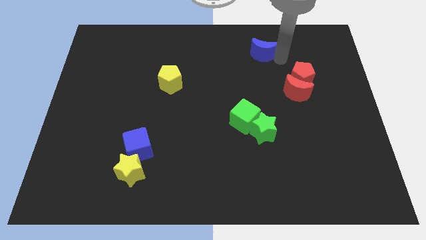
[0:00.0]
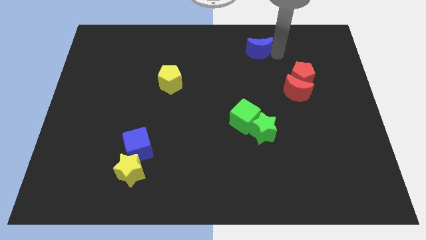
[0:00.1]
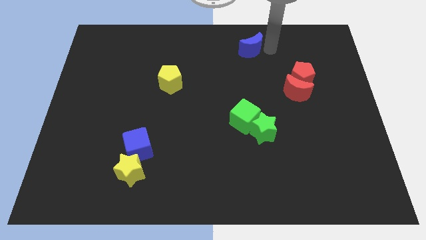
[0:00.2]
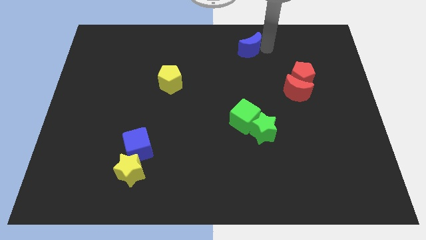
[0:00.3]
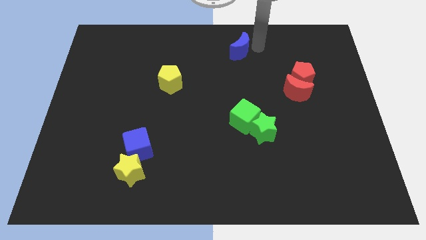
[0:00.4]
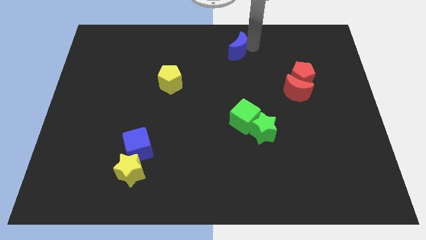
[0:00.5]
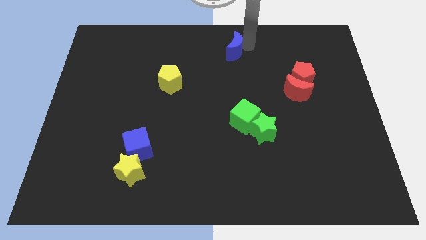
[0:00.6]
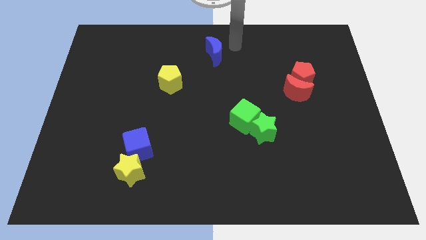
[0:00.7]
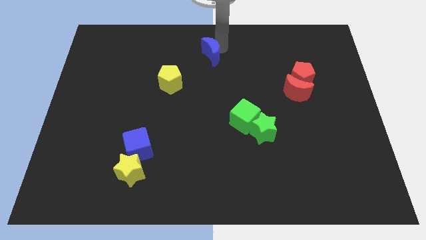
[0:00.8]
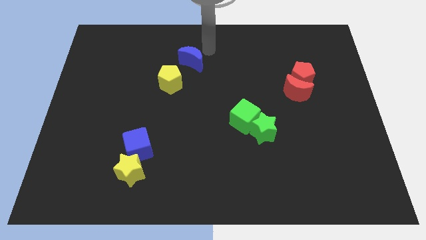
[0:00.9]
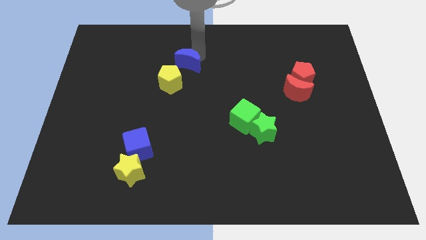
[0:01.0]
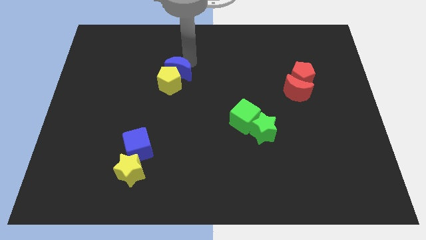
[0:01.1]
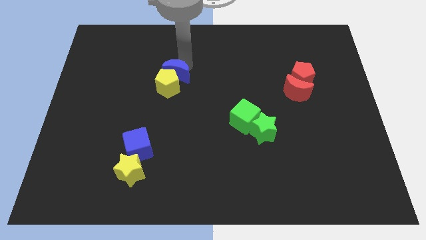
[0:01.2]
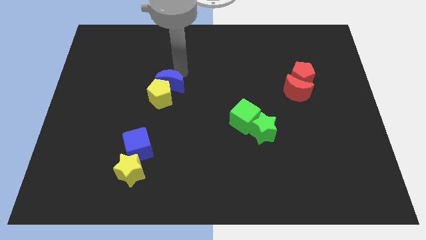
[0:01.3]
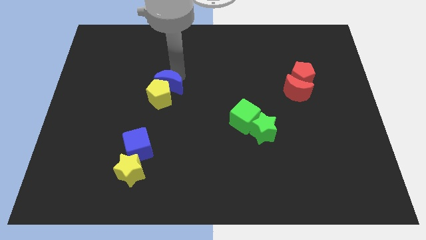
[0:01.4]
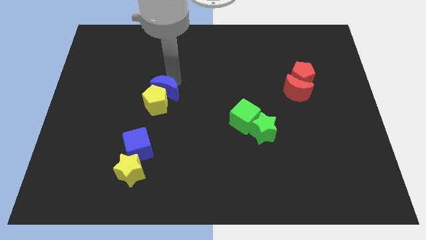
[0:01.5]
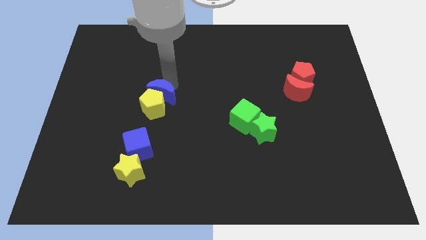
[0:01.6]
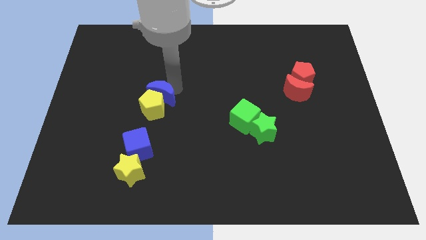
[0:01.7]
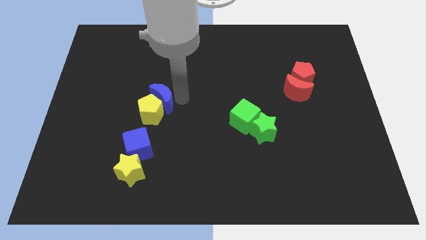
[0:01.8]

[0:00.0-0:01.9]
drag the blue crescent towards the yellow pentagon

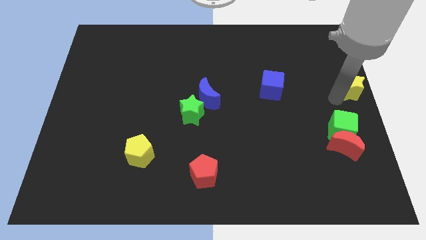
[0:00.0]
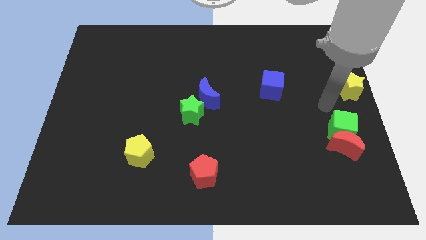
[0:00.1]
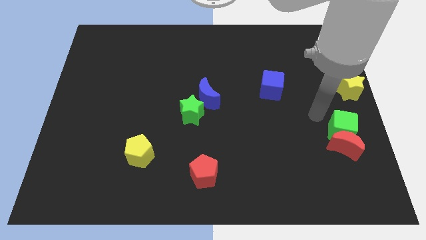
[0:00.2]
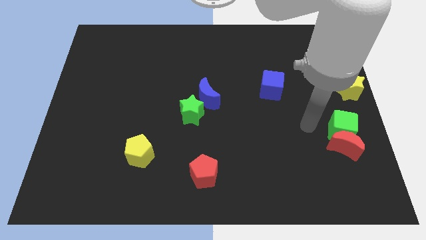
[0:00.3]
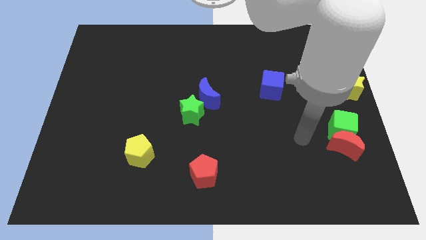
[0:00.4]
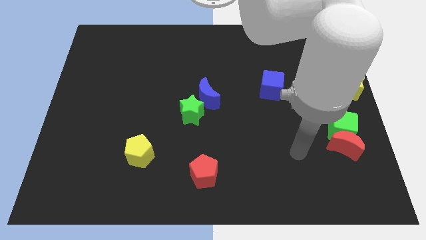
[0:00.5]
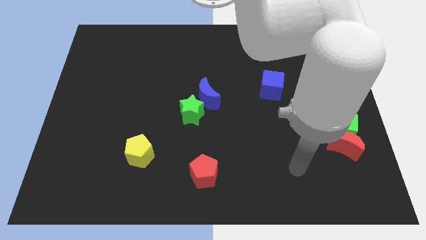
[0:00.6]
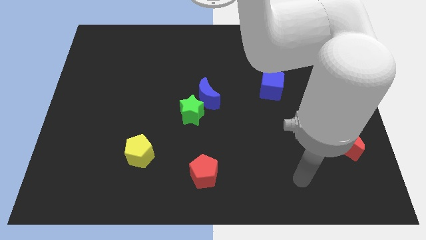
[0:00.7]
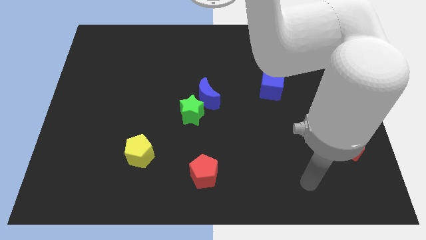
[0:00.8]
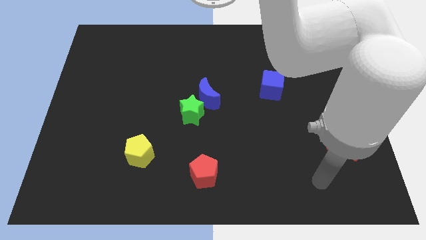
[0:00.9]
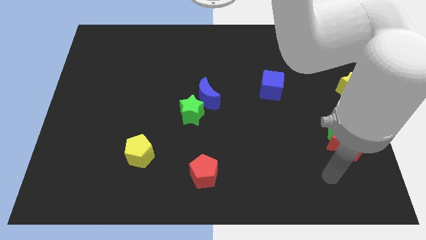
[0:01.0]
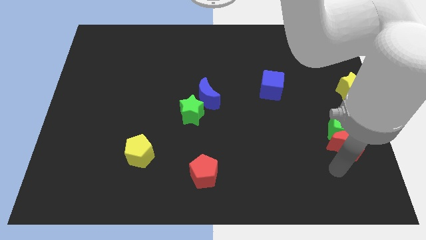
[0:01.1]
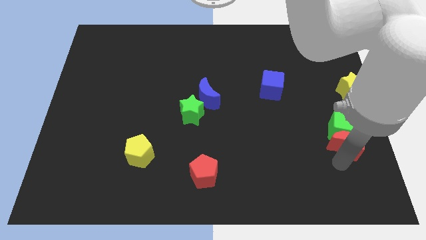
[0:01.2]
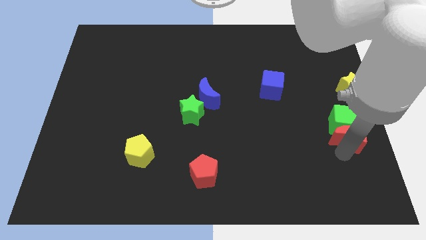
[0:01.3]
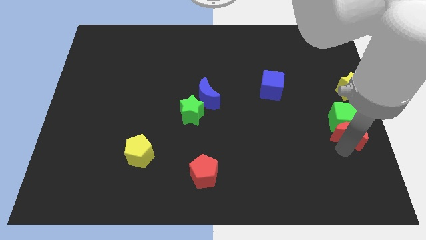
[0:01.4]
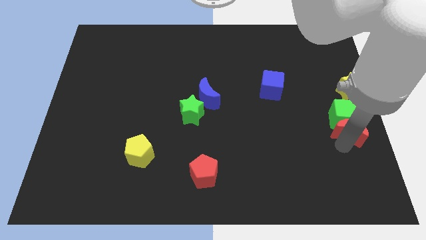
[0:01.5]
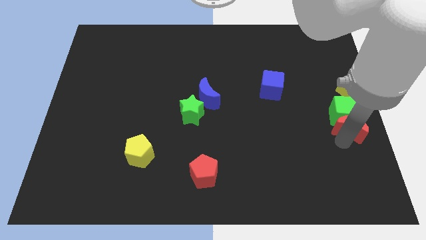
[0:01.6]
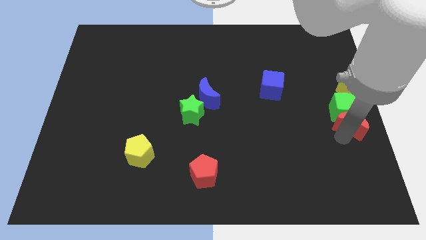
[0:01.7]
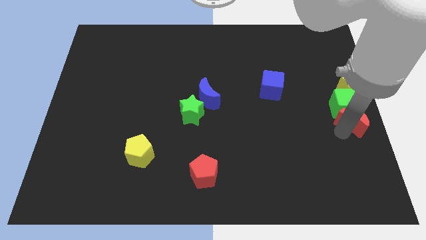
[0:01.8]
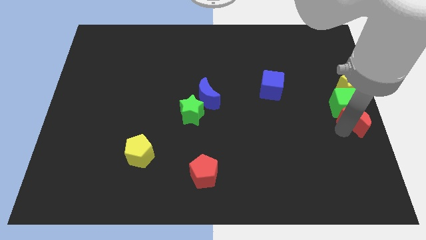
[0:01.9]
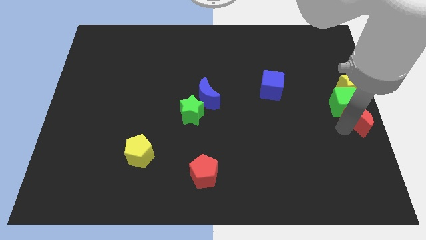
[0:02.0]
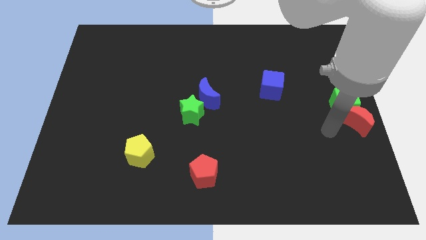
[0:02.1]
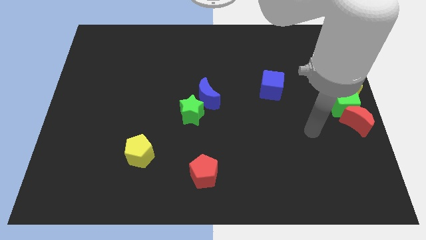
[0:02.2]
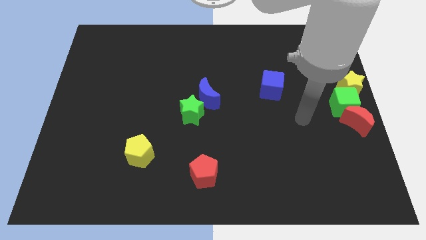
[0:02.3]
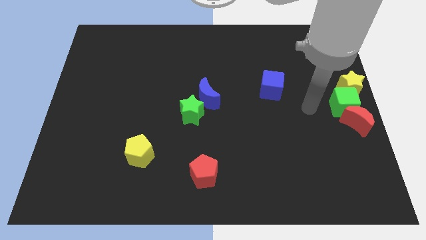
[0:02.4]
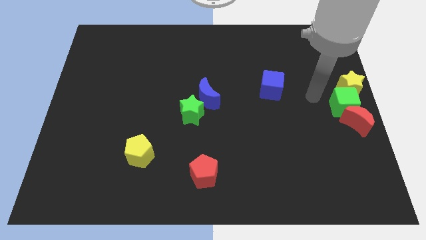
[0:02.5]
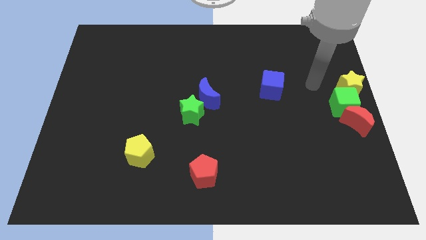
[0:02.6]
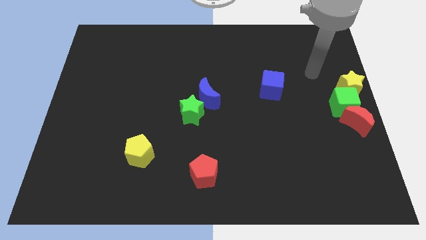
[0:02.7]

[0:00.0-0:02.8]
push the red crescent and the green cube into the yellow star

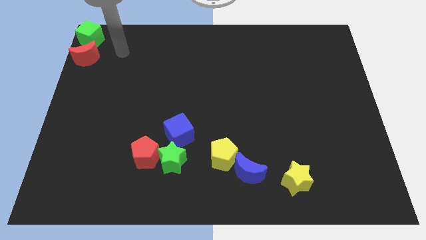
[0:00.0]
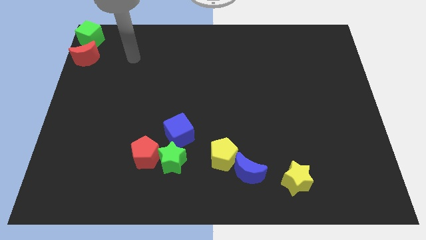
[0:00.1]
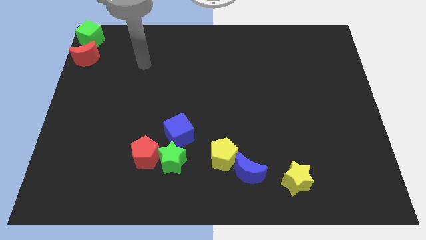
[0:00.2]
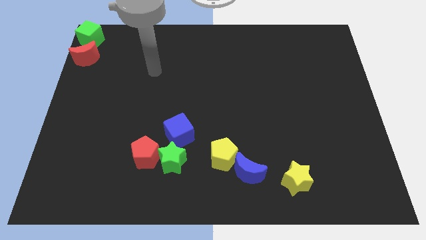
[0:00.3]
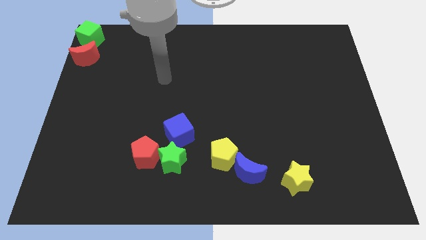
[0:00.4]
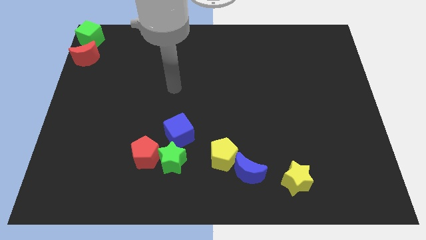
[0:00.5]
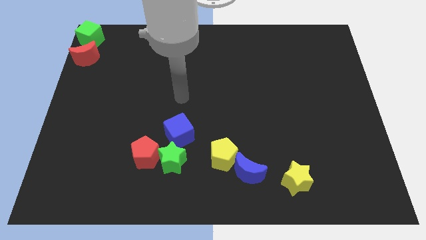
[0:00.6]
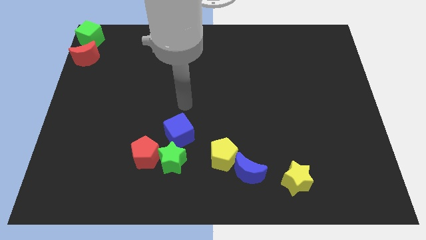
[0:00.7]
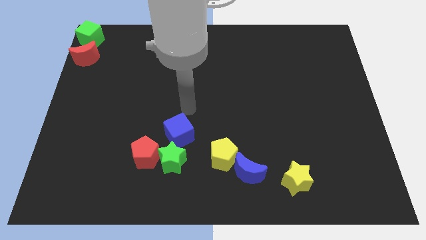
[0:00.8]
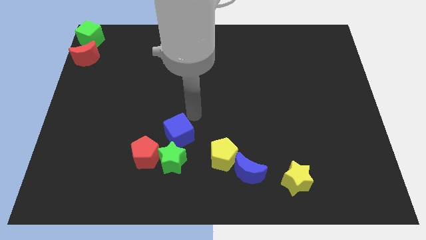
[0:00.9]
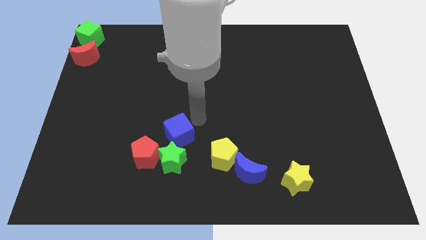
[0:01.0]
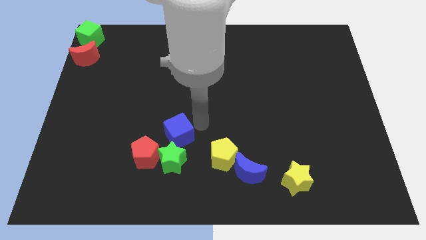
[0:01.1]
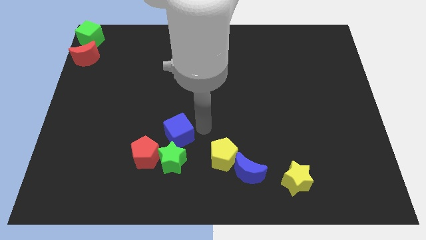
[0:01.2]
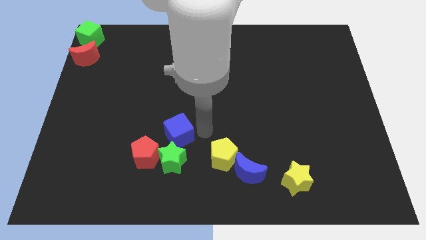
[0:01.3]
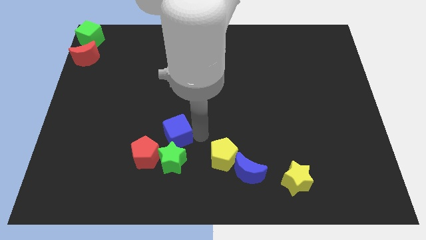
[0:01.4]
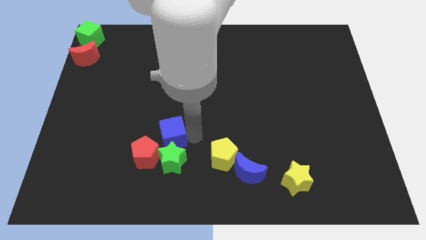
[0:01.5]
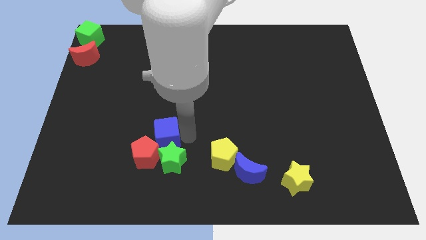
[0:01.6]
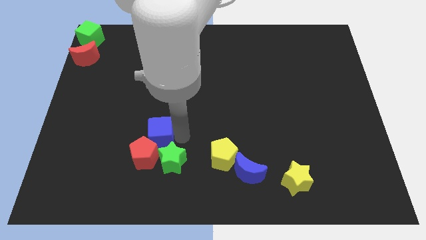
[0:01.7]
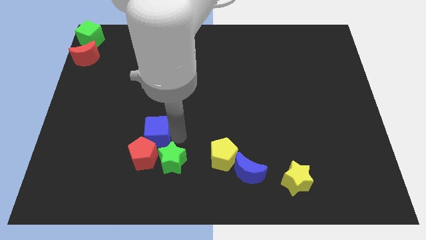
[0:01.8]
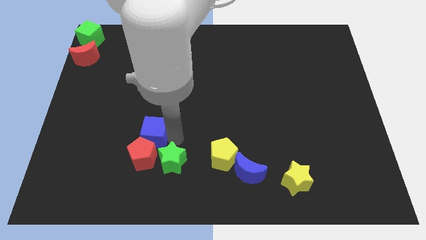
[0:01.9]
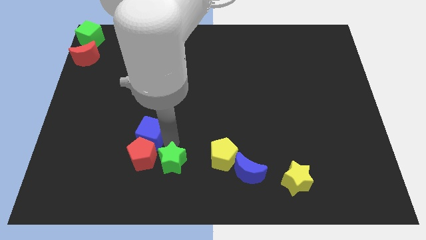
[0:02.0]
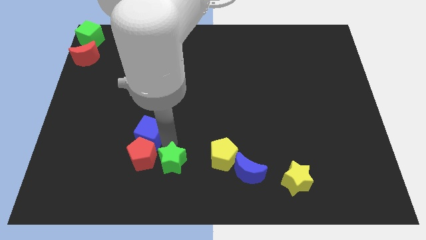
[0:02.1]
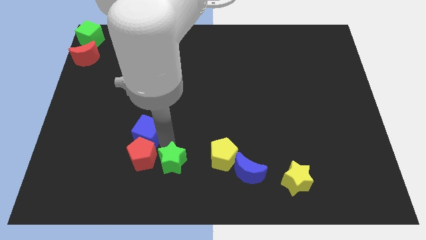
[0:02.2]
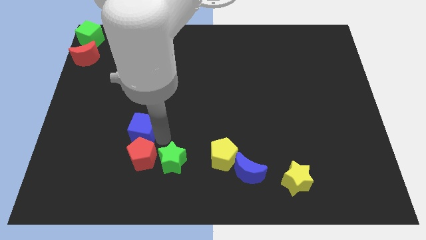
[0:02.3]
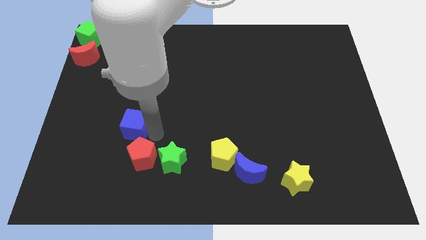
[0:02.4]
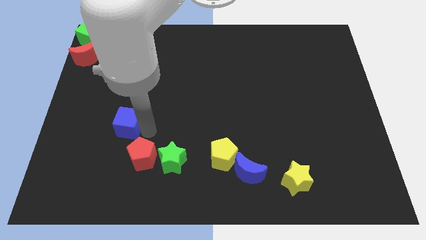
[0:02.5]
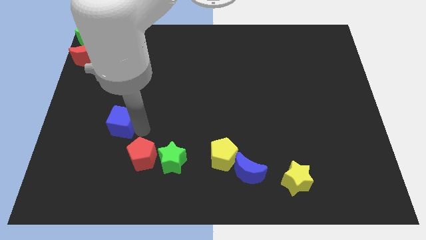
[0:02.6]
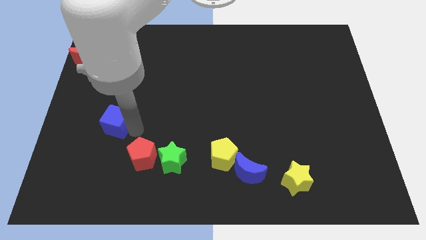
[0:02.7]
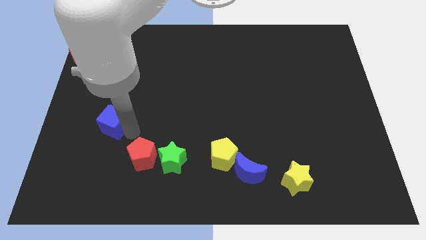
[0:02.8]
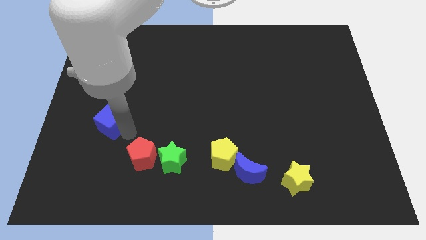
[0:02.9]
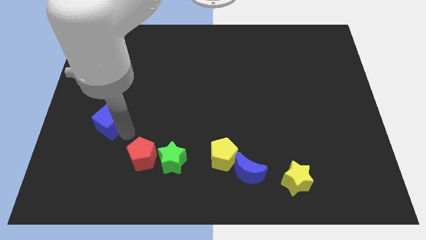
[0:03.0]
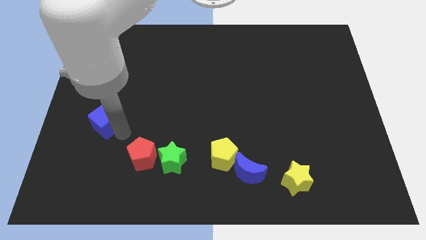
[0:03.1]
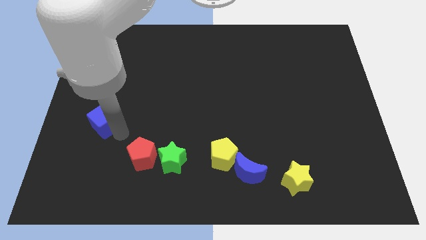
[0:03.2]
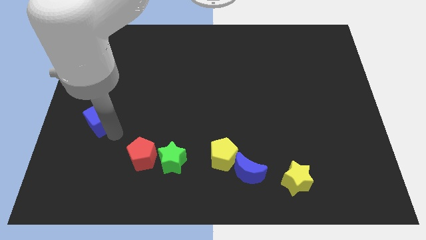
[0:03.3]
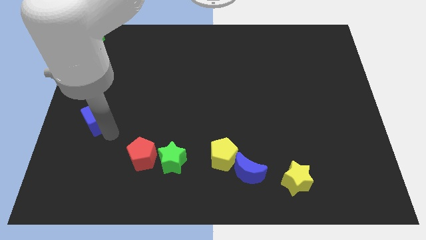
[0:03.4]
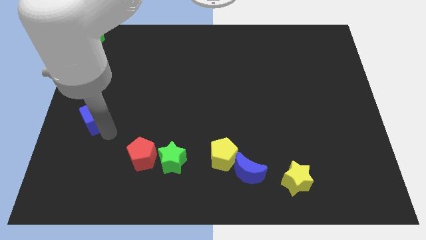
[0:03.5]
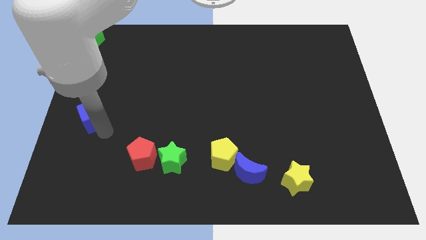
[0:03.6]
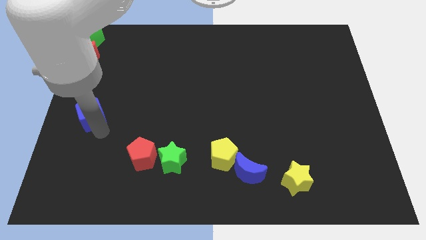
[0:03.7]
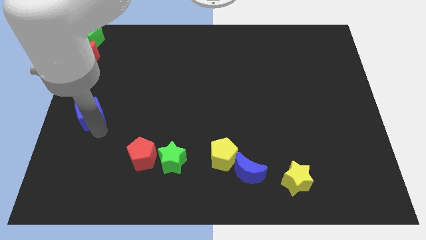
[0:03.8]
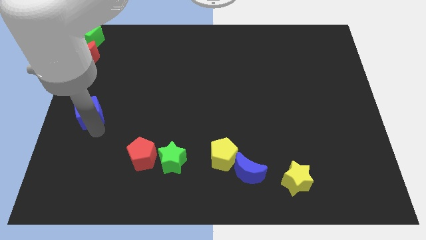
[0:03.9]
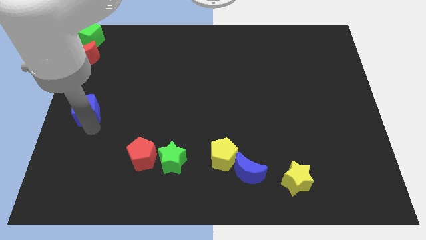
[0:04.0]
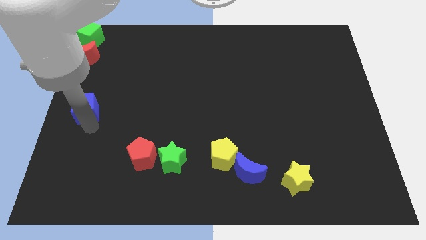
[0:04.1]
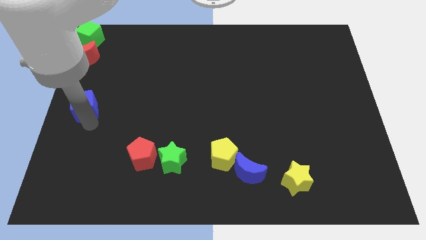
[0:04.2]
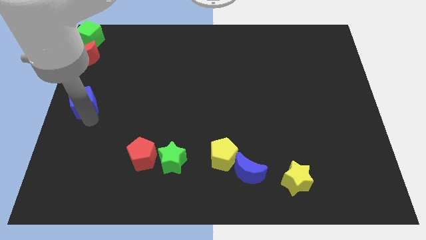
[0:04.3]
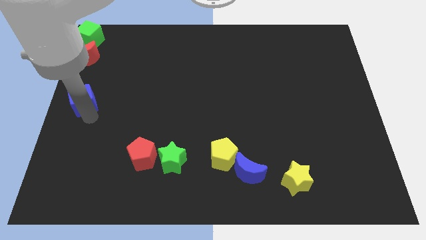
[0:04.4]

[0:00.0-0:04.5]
place the blue cube at the center left side of the board
